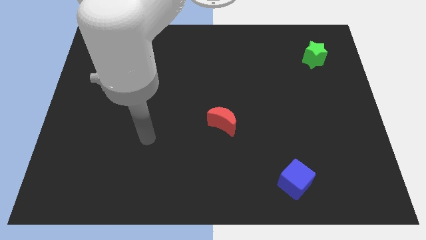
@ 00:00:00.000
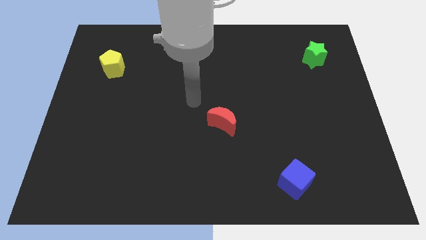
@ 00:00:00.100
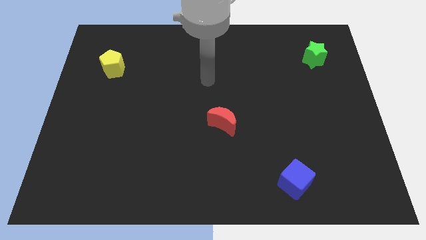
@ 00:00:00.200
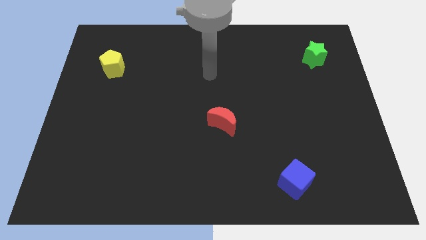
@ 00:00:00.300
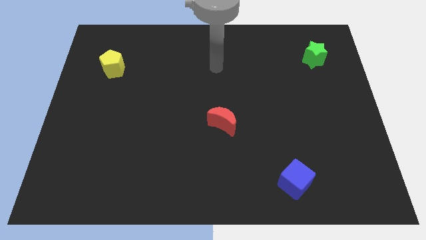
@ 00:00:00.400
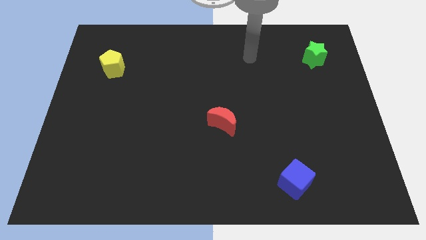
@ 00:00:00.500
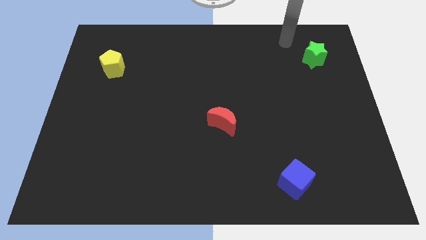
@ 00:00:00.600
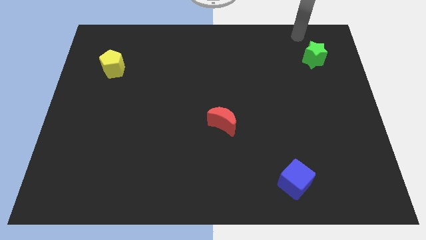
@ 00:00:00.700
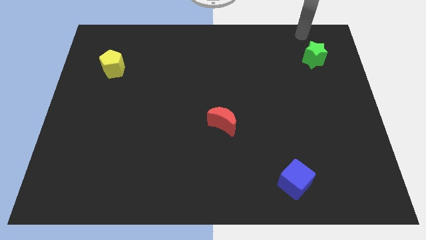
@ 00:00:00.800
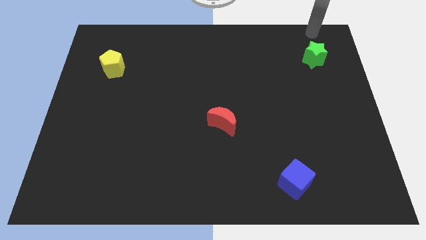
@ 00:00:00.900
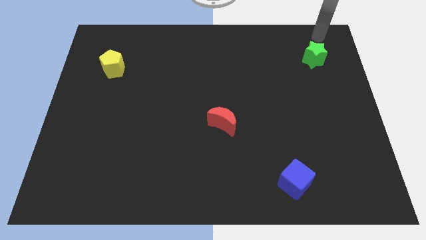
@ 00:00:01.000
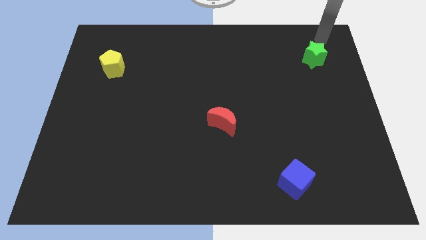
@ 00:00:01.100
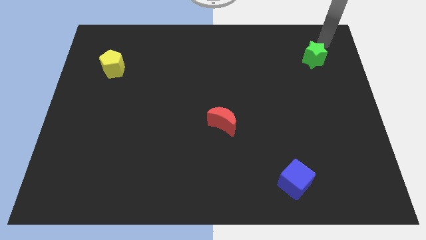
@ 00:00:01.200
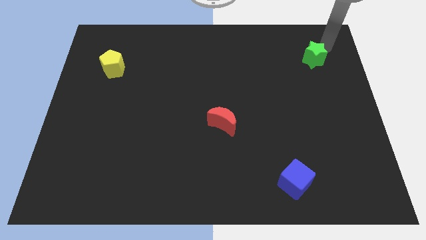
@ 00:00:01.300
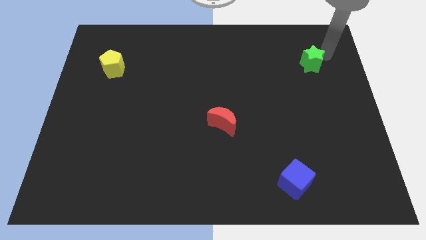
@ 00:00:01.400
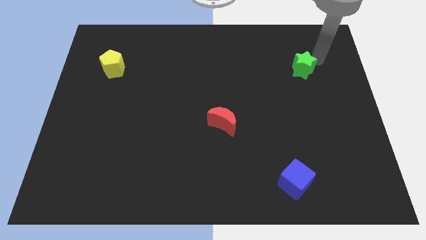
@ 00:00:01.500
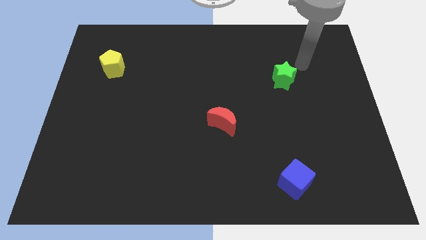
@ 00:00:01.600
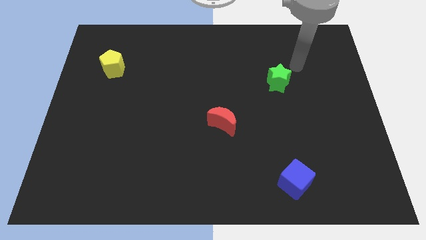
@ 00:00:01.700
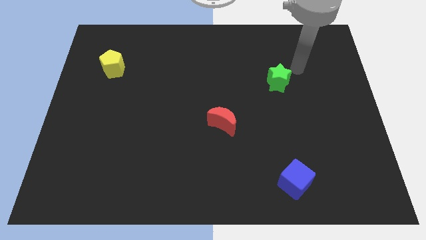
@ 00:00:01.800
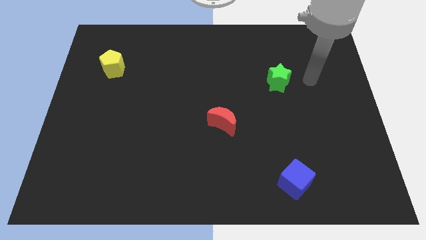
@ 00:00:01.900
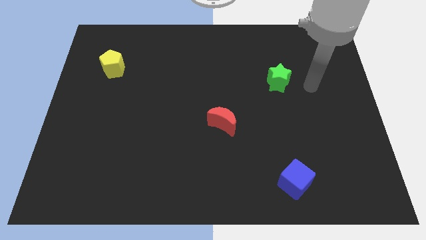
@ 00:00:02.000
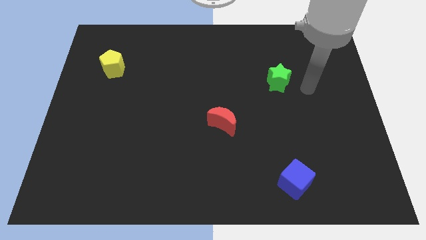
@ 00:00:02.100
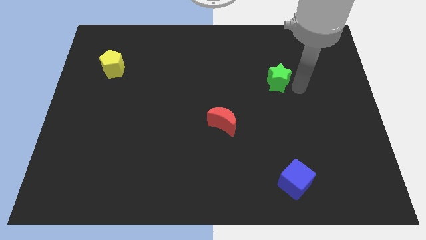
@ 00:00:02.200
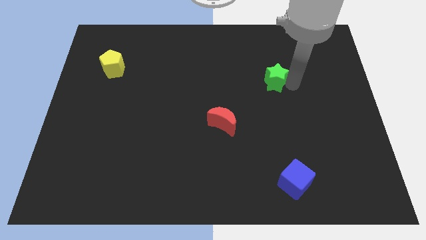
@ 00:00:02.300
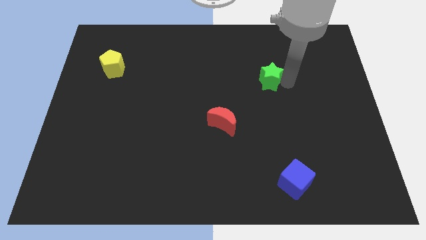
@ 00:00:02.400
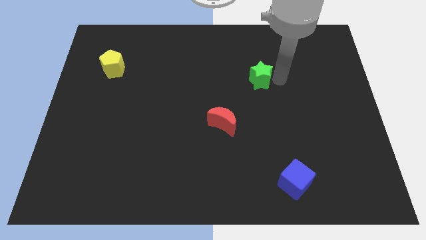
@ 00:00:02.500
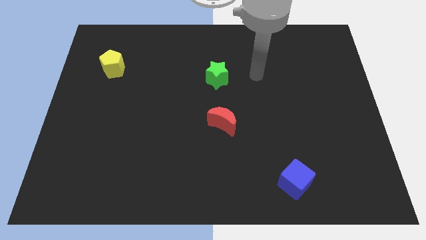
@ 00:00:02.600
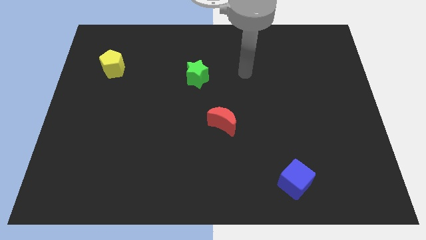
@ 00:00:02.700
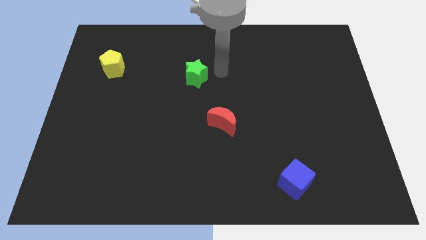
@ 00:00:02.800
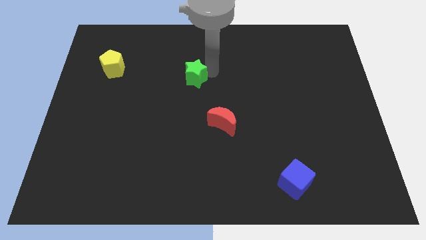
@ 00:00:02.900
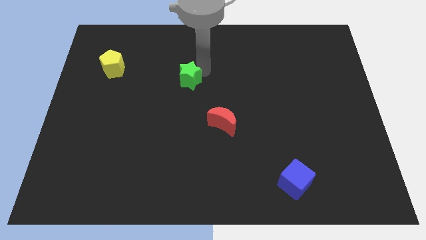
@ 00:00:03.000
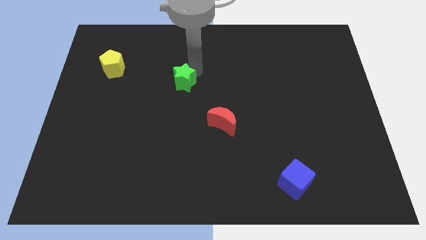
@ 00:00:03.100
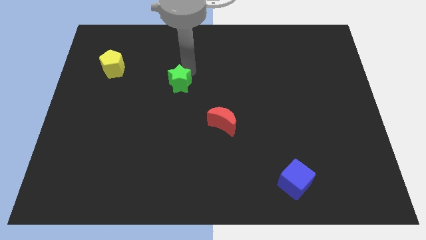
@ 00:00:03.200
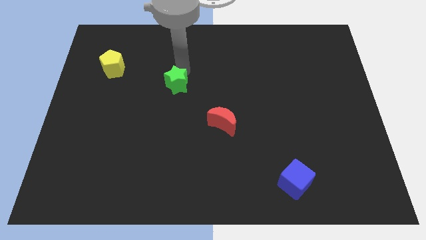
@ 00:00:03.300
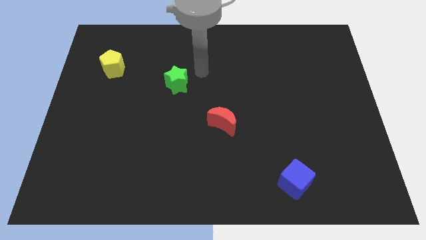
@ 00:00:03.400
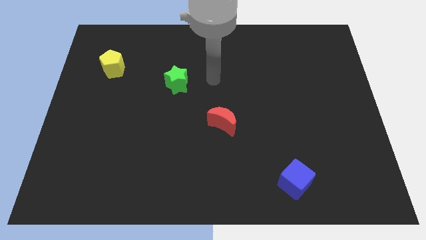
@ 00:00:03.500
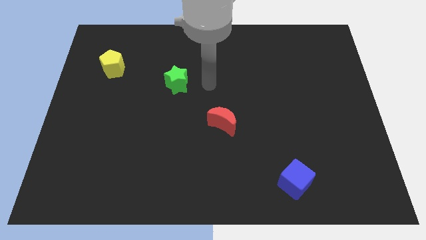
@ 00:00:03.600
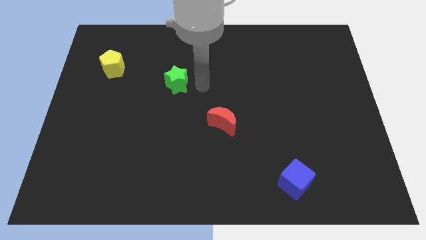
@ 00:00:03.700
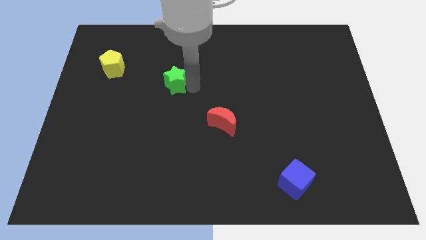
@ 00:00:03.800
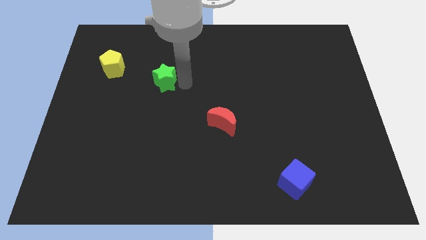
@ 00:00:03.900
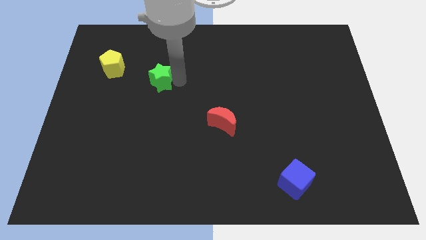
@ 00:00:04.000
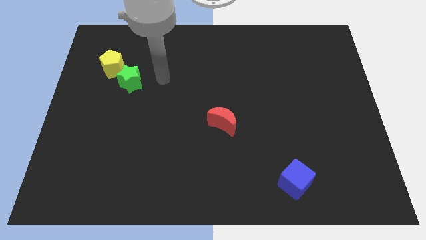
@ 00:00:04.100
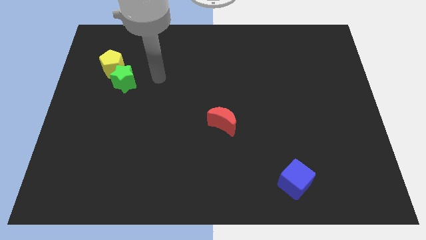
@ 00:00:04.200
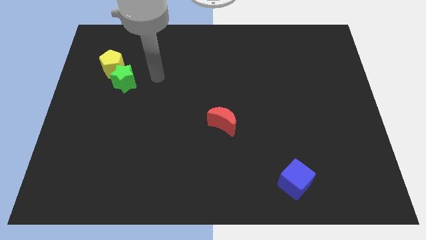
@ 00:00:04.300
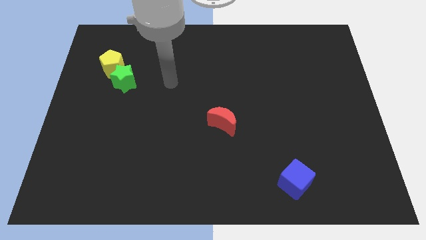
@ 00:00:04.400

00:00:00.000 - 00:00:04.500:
put the green block towards the pentagon

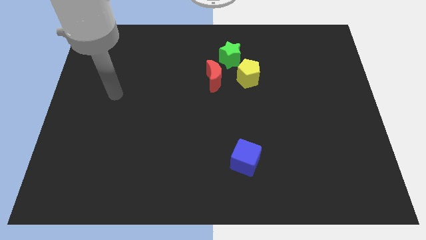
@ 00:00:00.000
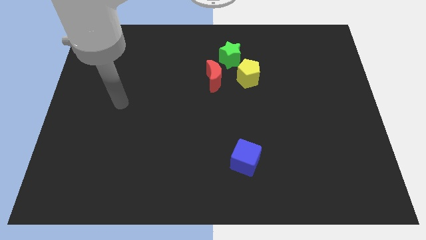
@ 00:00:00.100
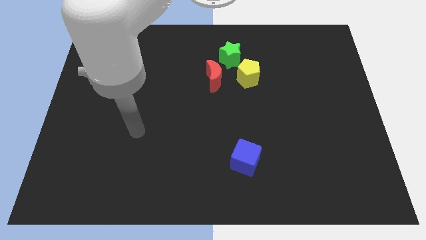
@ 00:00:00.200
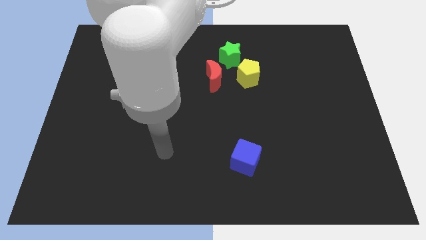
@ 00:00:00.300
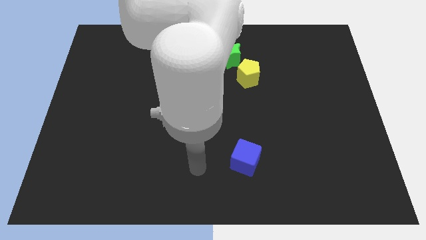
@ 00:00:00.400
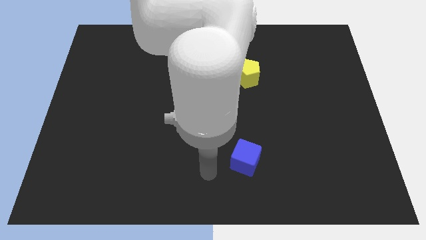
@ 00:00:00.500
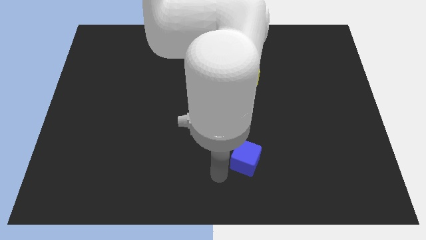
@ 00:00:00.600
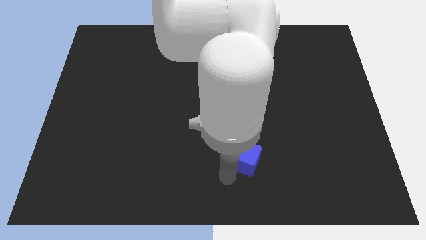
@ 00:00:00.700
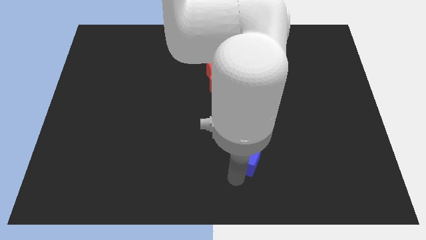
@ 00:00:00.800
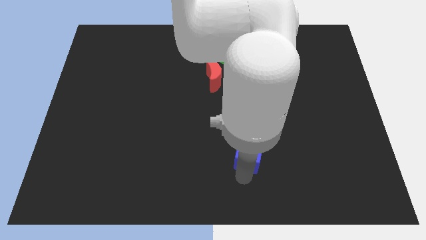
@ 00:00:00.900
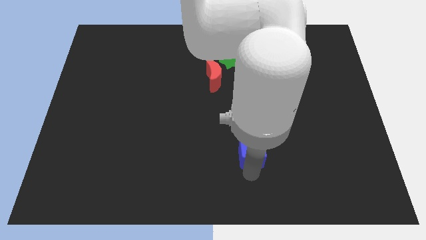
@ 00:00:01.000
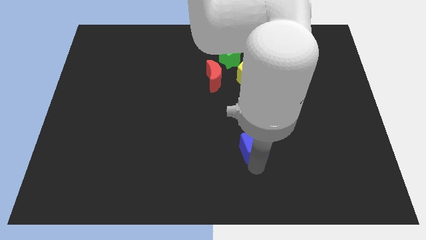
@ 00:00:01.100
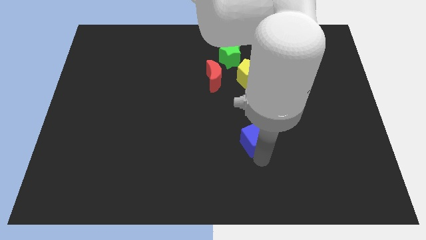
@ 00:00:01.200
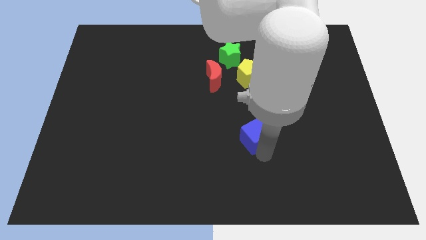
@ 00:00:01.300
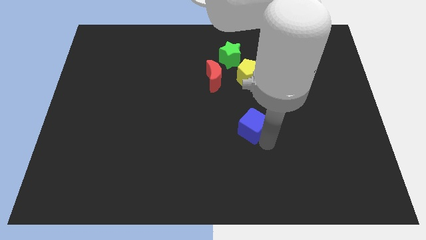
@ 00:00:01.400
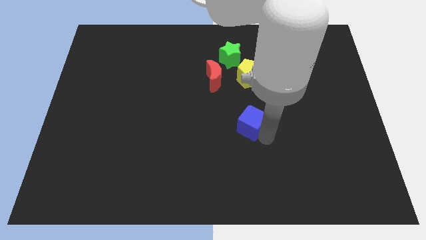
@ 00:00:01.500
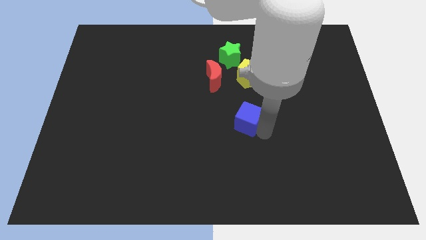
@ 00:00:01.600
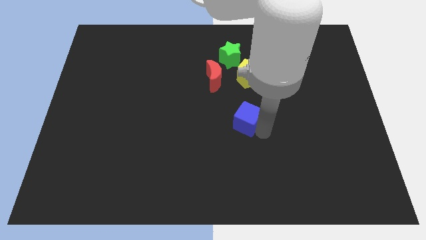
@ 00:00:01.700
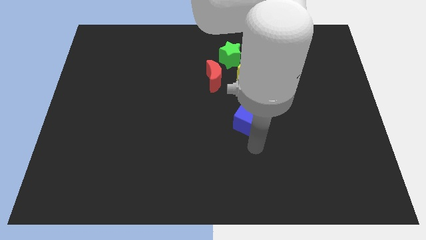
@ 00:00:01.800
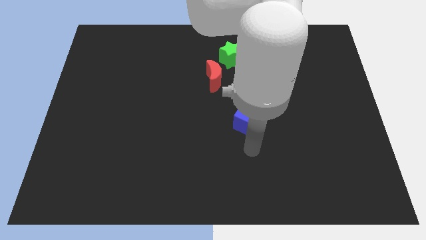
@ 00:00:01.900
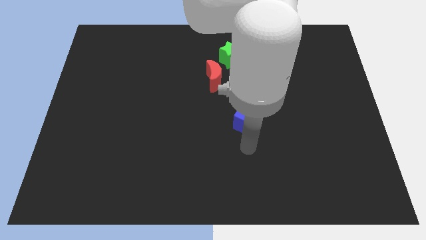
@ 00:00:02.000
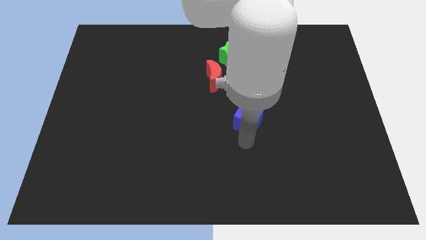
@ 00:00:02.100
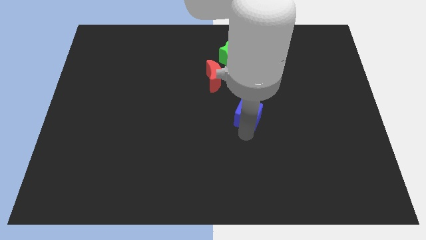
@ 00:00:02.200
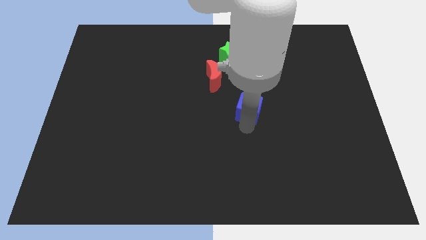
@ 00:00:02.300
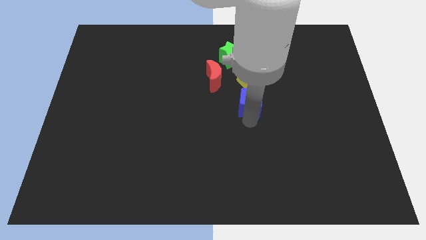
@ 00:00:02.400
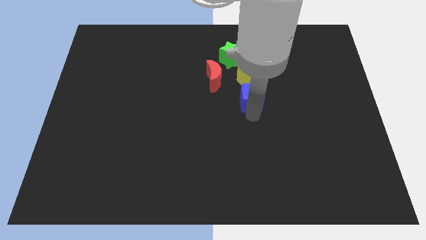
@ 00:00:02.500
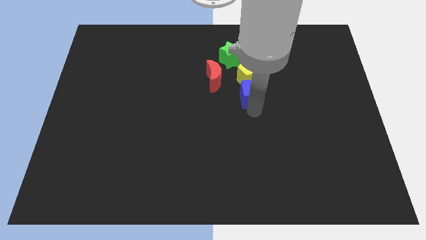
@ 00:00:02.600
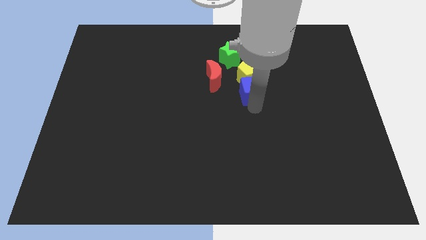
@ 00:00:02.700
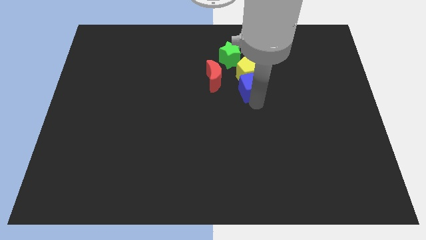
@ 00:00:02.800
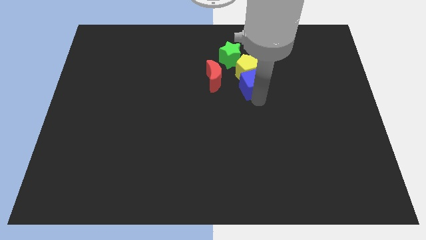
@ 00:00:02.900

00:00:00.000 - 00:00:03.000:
put the blue block to the pentagon

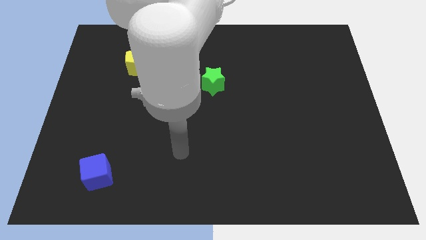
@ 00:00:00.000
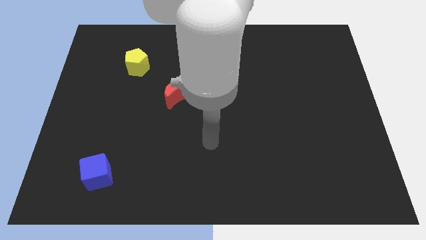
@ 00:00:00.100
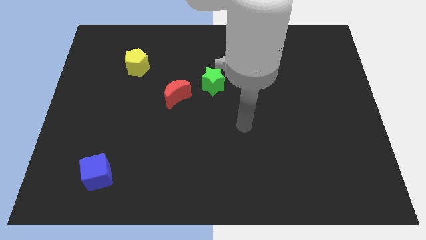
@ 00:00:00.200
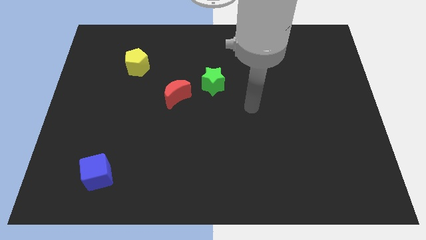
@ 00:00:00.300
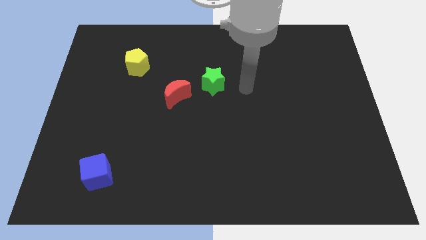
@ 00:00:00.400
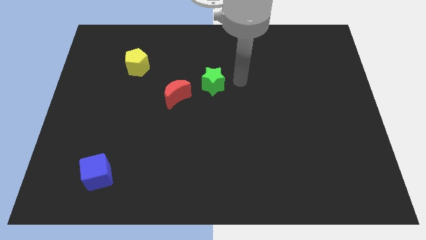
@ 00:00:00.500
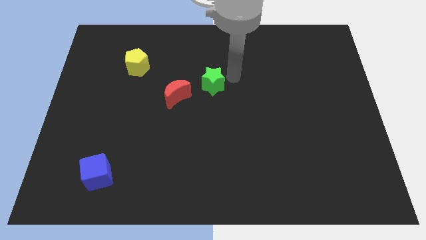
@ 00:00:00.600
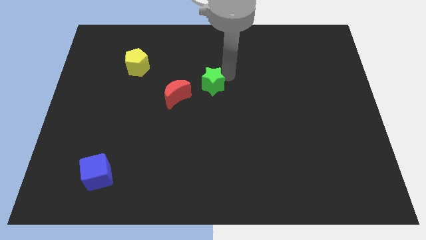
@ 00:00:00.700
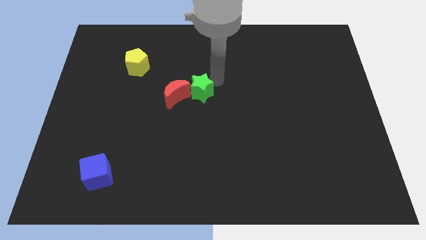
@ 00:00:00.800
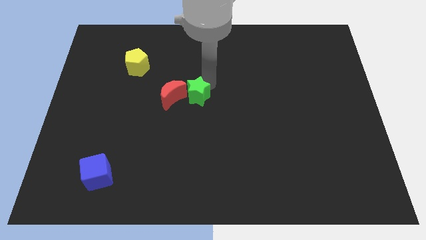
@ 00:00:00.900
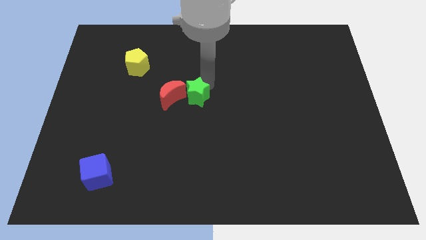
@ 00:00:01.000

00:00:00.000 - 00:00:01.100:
push the star towards the red moon
